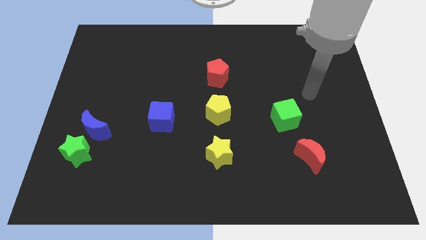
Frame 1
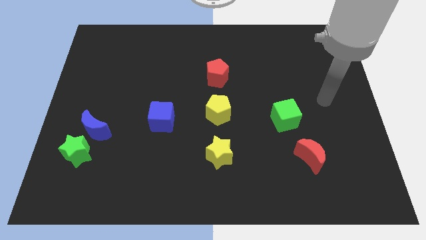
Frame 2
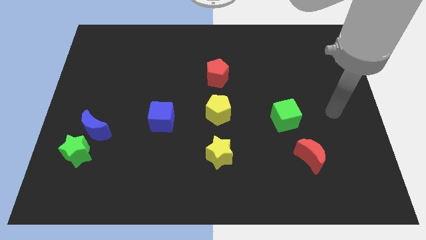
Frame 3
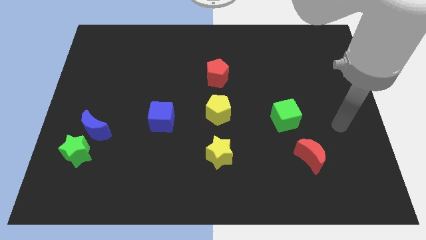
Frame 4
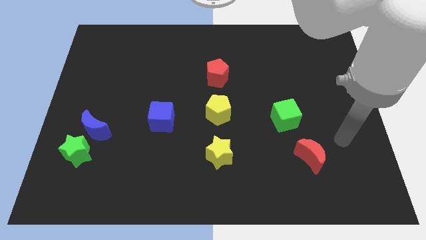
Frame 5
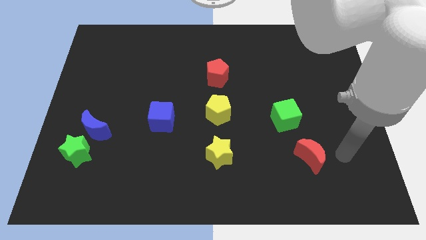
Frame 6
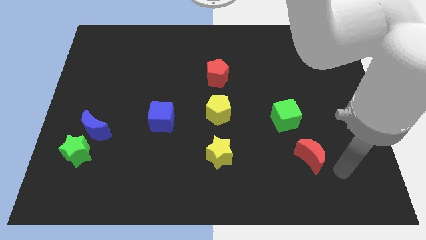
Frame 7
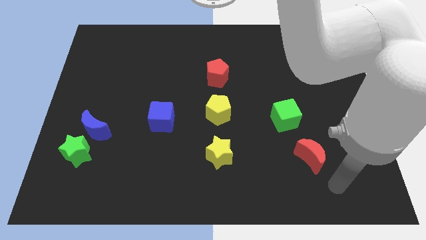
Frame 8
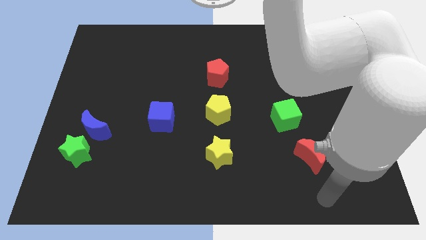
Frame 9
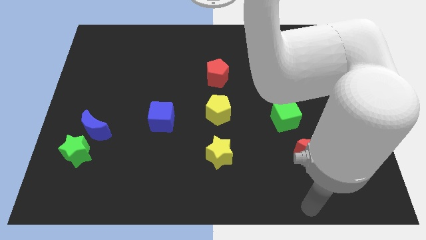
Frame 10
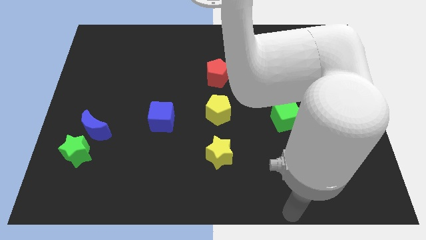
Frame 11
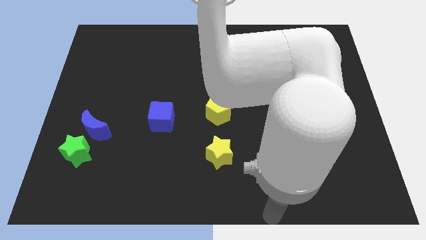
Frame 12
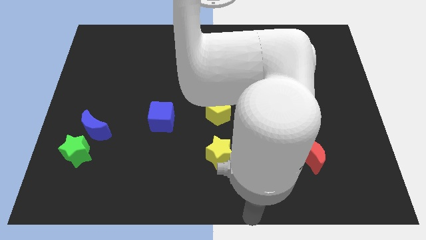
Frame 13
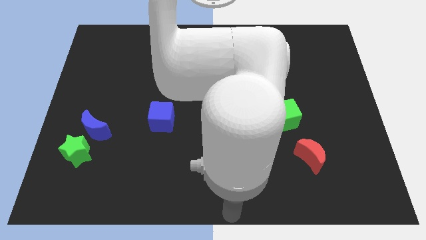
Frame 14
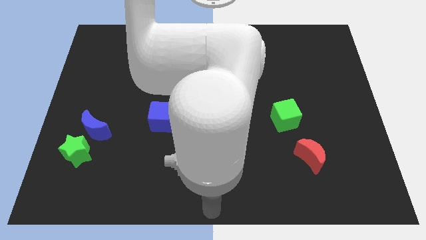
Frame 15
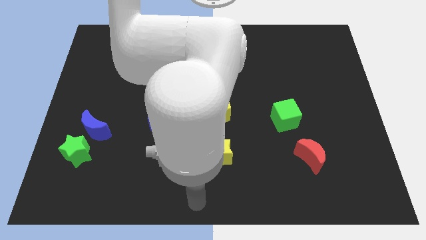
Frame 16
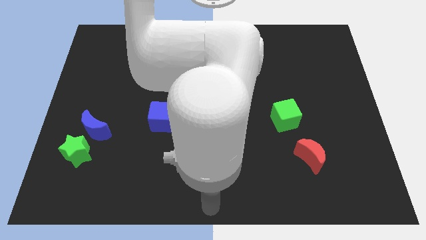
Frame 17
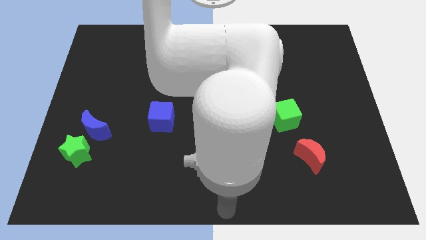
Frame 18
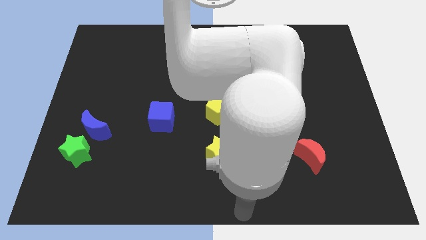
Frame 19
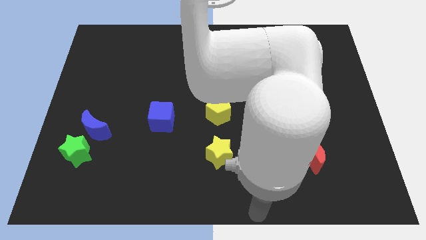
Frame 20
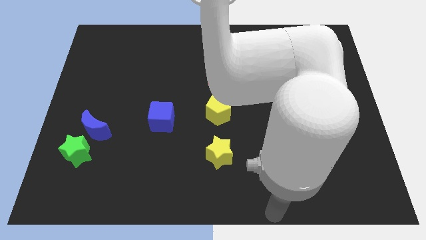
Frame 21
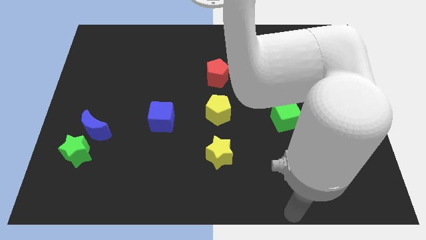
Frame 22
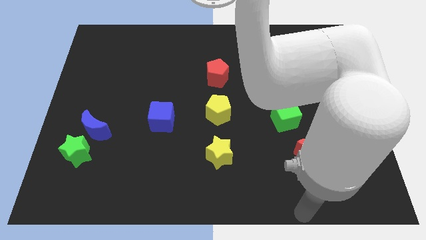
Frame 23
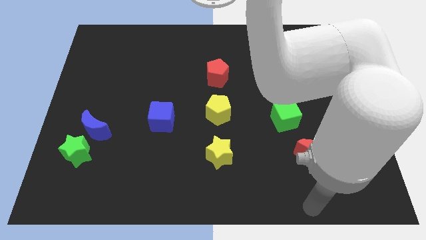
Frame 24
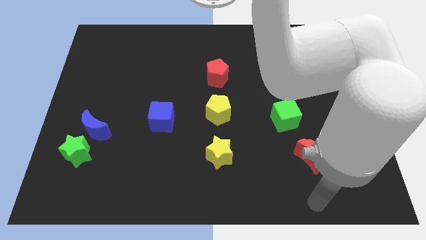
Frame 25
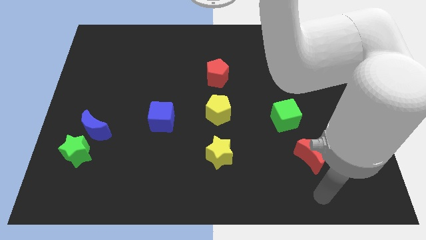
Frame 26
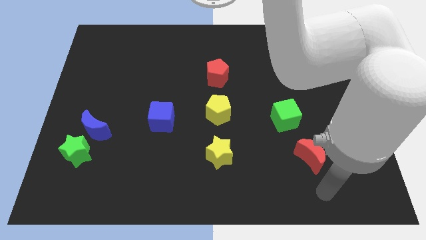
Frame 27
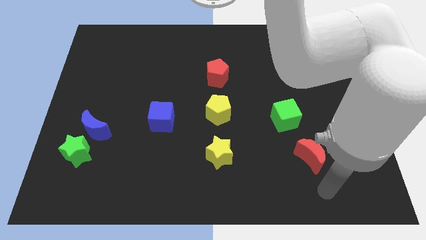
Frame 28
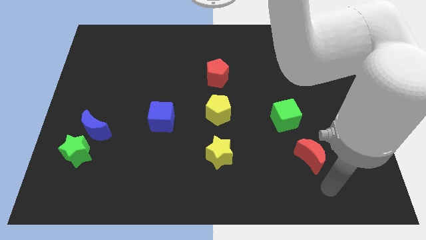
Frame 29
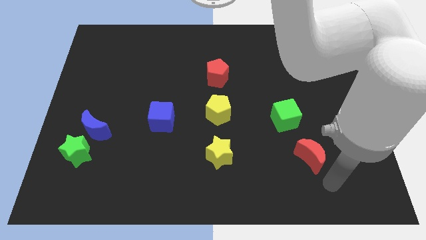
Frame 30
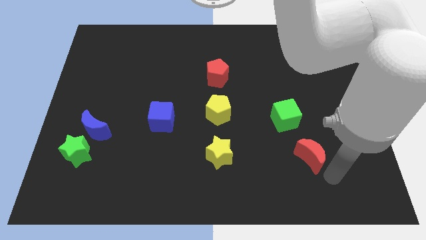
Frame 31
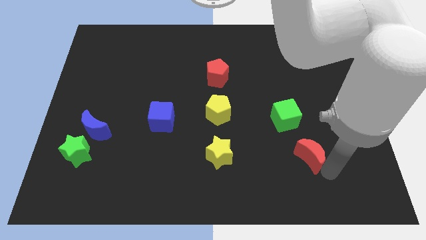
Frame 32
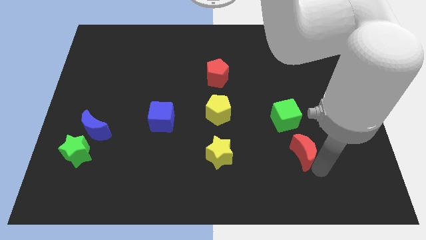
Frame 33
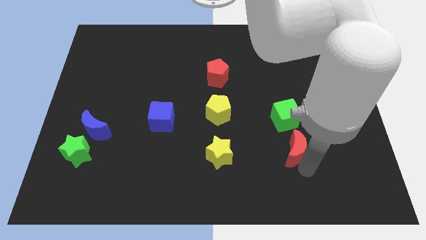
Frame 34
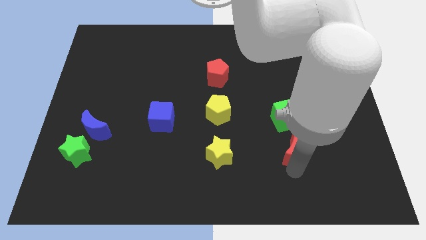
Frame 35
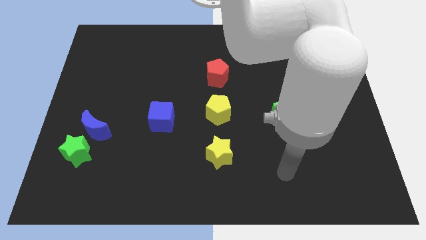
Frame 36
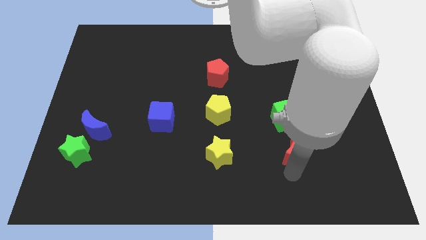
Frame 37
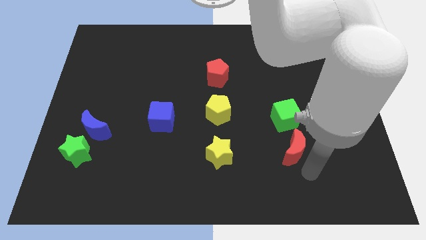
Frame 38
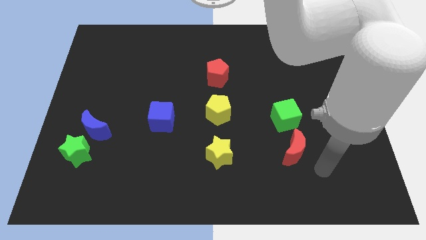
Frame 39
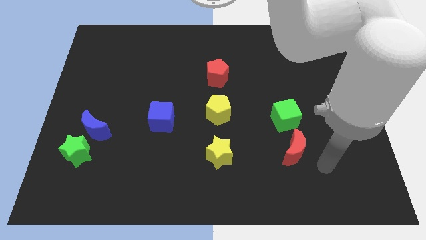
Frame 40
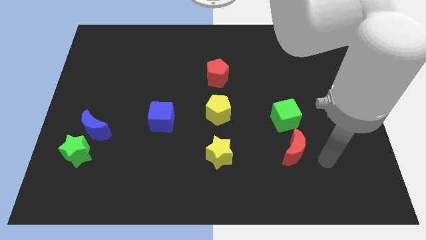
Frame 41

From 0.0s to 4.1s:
slide red crescent below the green cube

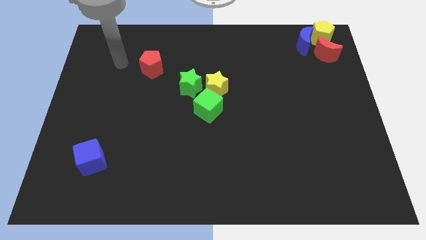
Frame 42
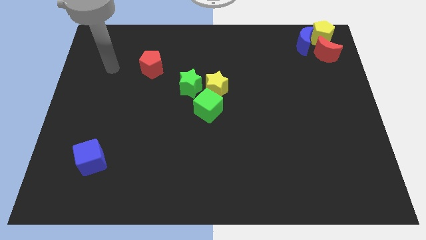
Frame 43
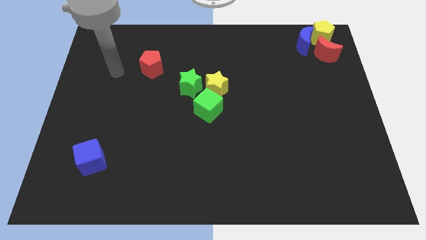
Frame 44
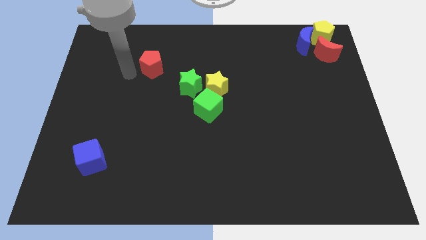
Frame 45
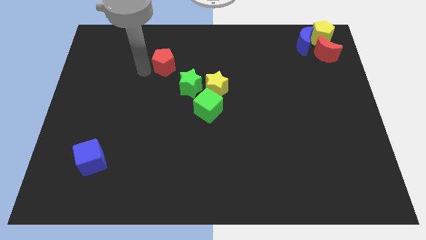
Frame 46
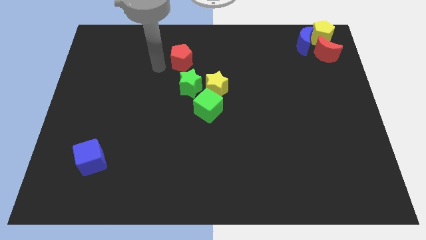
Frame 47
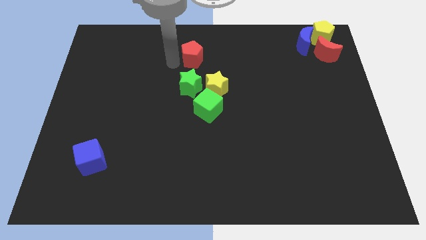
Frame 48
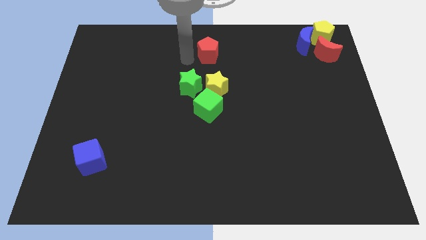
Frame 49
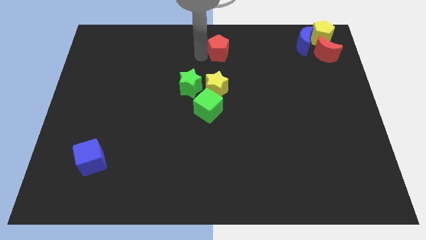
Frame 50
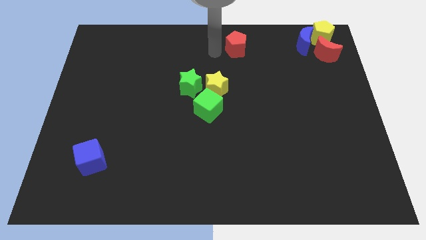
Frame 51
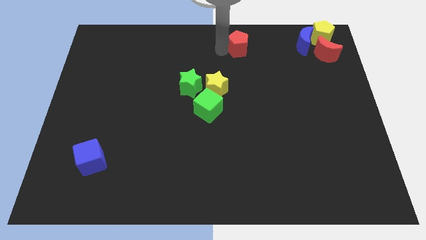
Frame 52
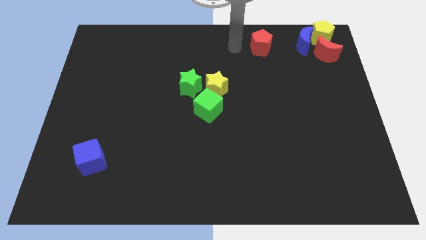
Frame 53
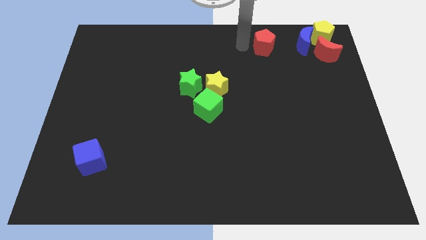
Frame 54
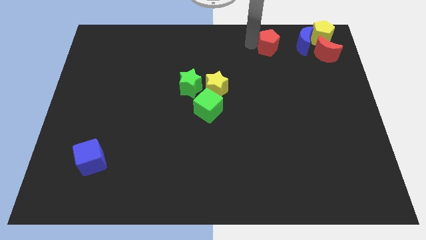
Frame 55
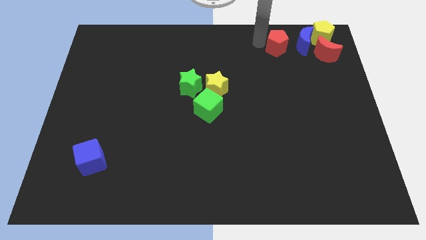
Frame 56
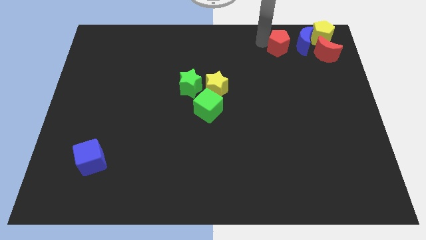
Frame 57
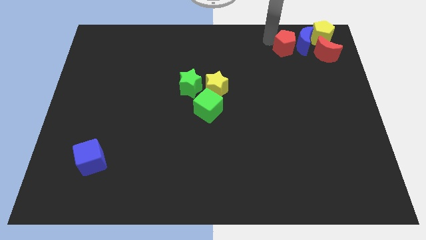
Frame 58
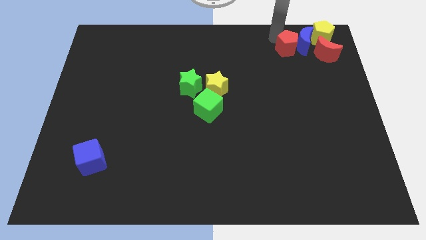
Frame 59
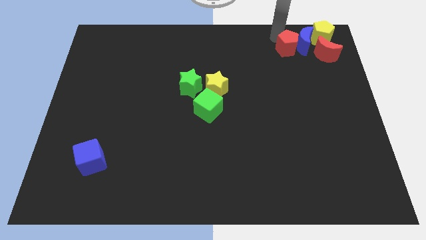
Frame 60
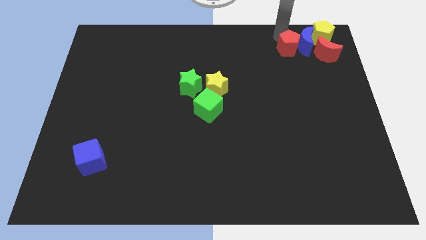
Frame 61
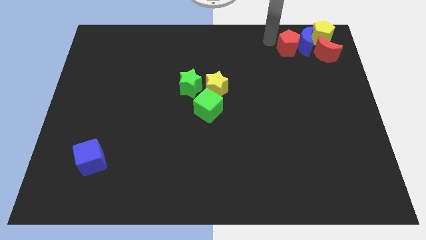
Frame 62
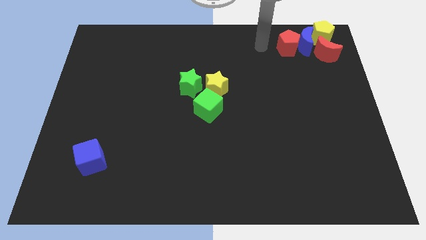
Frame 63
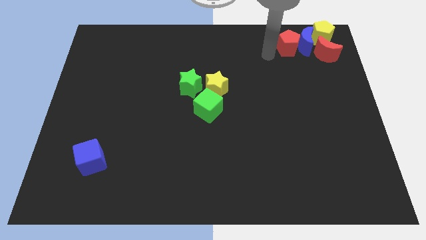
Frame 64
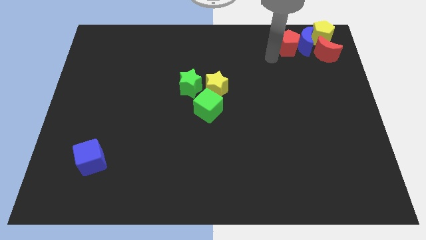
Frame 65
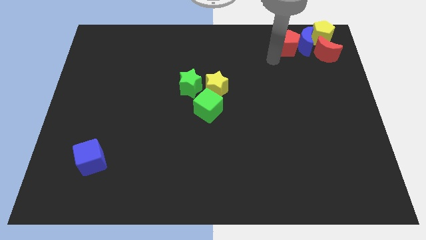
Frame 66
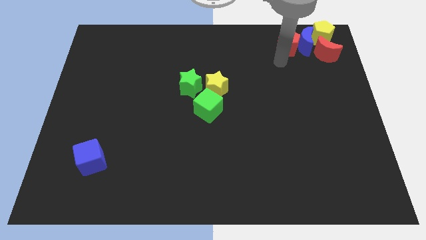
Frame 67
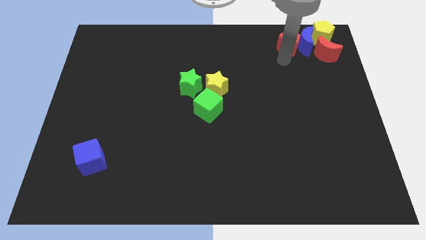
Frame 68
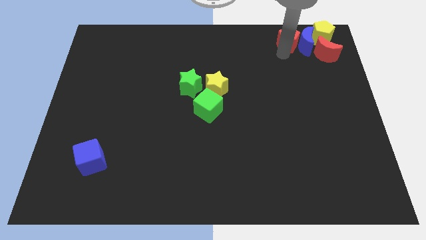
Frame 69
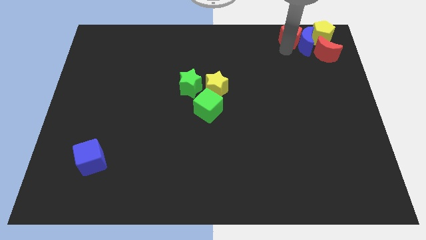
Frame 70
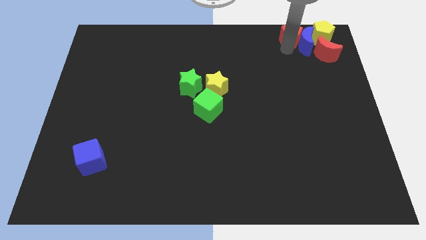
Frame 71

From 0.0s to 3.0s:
place the red pentagon left to the blue moon

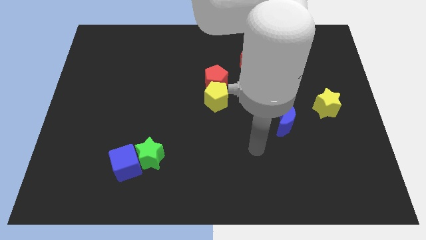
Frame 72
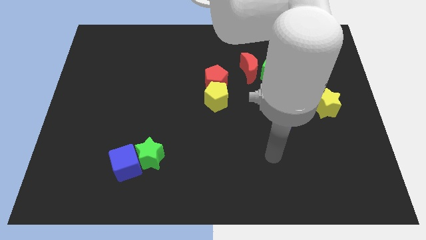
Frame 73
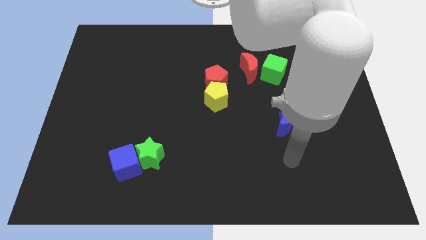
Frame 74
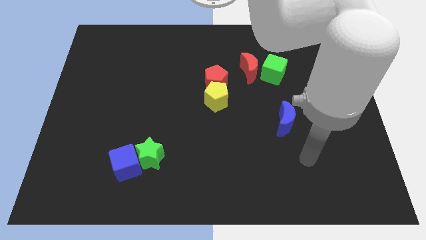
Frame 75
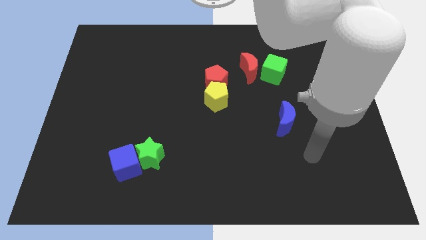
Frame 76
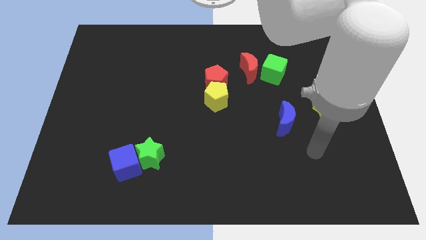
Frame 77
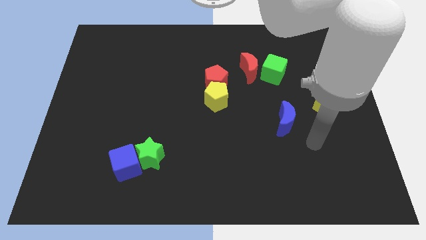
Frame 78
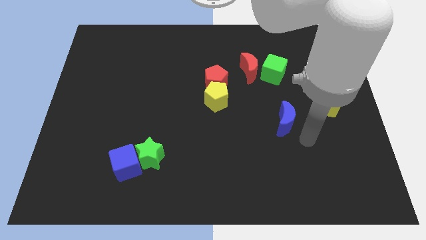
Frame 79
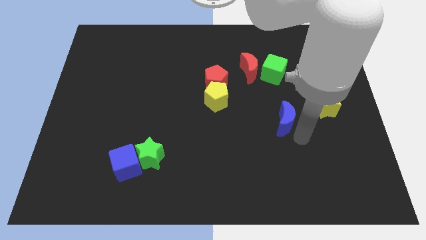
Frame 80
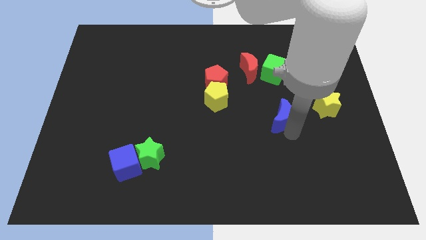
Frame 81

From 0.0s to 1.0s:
touch the blue moon

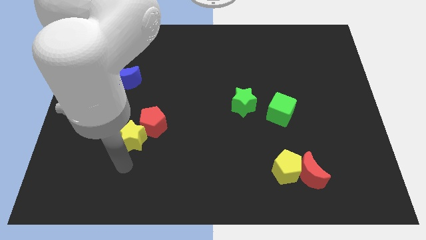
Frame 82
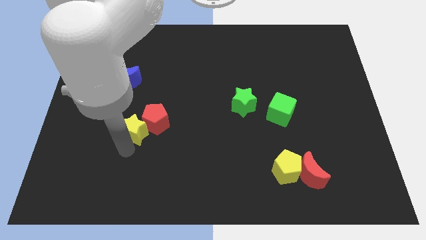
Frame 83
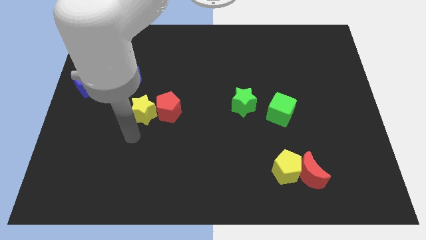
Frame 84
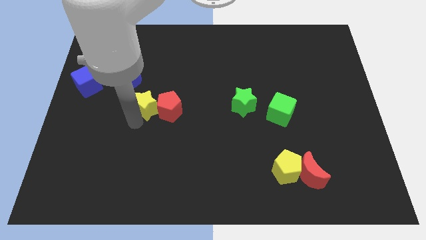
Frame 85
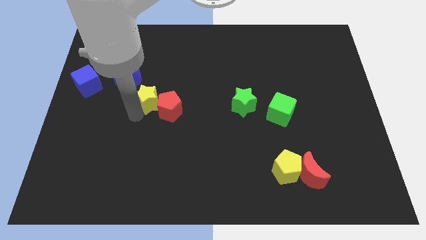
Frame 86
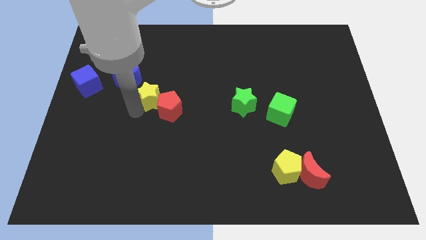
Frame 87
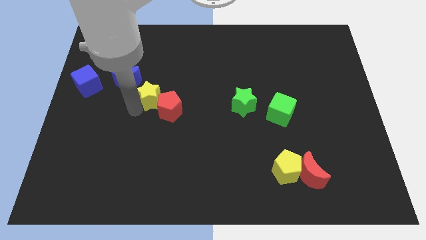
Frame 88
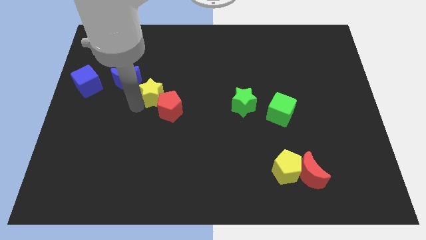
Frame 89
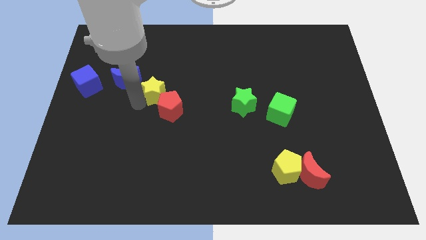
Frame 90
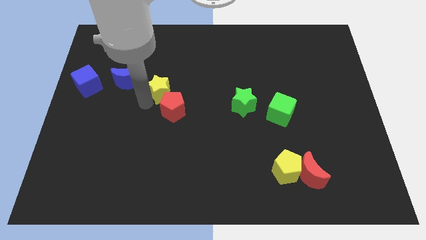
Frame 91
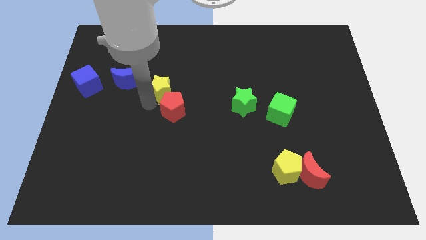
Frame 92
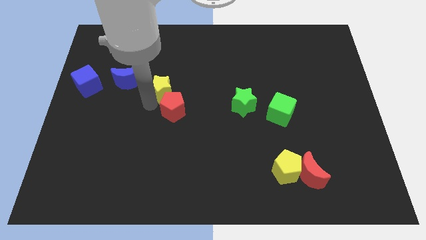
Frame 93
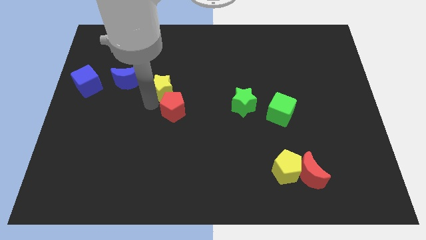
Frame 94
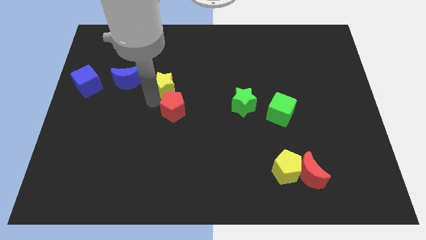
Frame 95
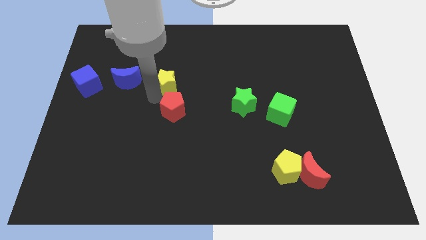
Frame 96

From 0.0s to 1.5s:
drag the yellow star above the red pentagon
